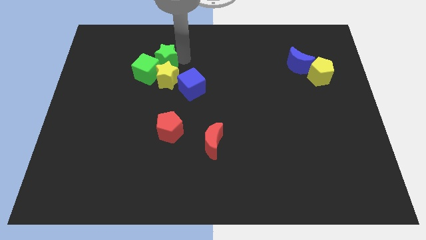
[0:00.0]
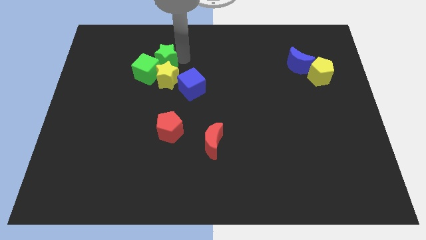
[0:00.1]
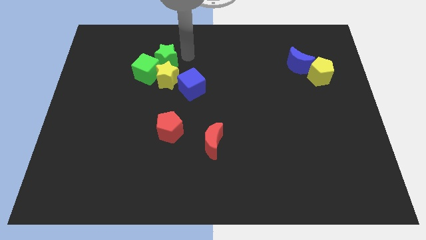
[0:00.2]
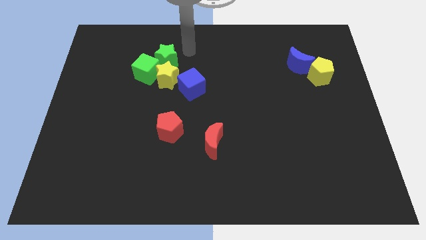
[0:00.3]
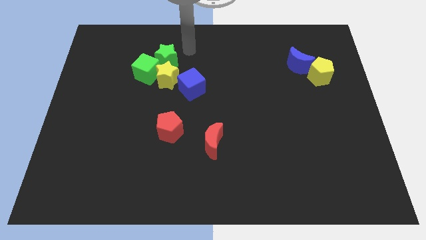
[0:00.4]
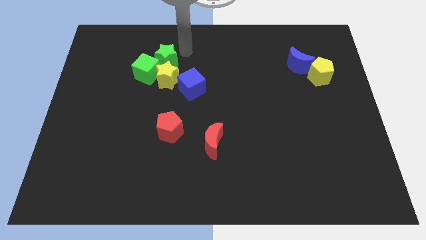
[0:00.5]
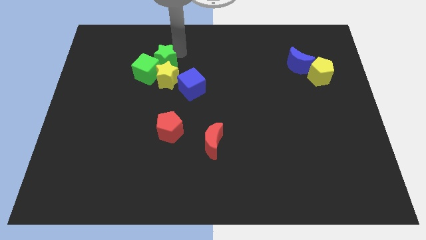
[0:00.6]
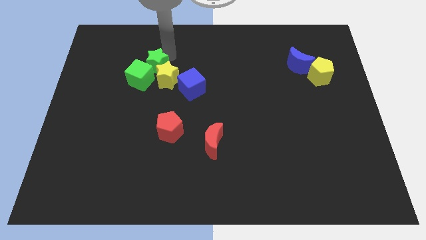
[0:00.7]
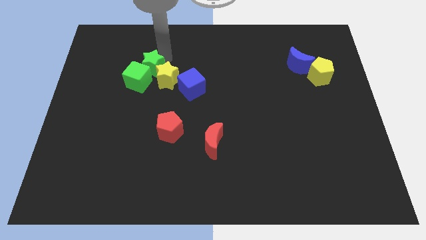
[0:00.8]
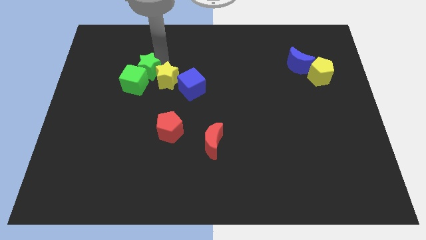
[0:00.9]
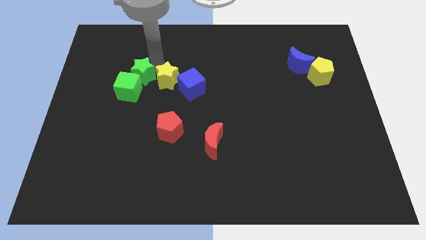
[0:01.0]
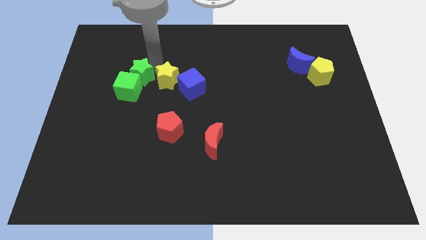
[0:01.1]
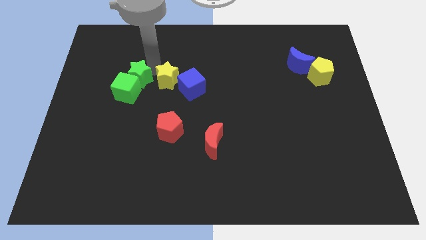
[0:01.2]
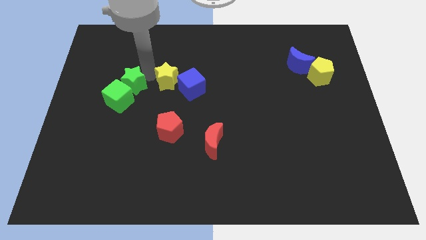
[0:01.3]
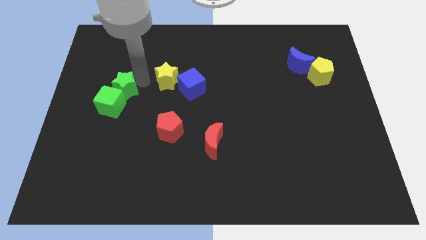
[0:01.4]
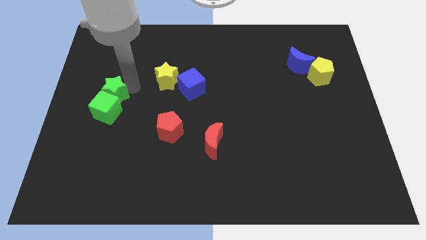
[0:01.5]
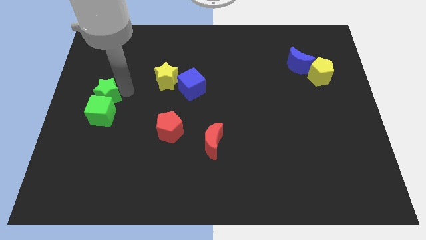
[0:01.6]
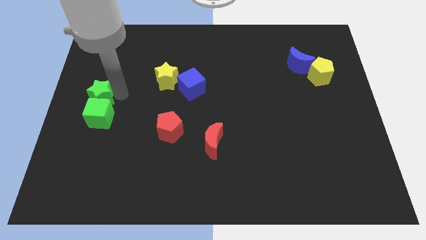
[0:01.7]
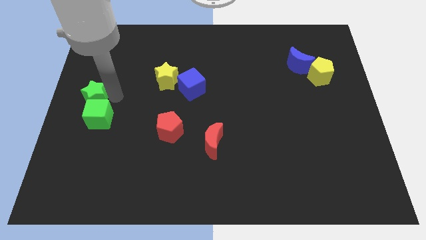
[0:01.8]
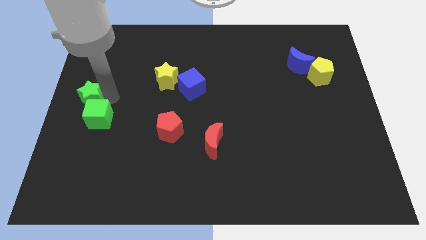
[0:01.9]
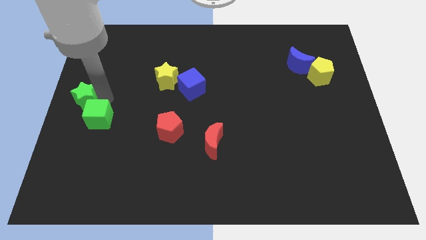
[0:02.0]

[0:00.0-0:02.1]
push the green star into the green cube

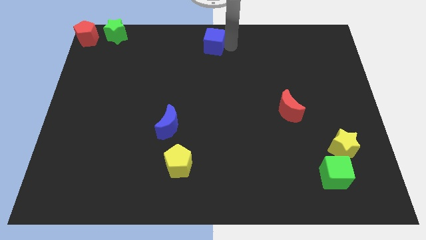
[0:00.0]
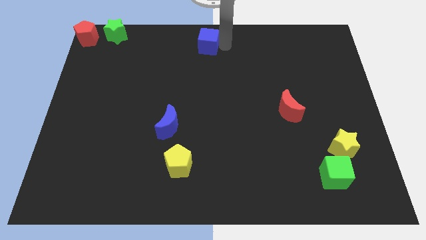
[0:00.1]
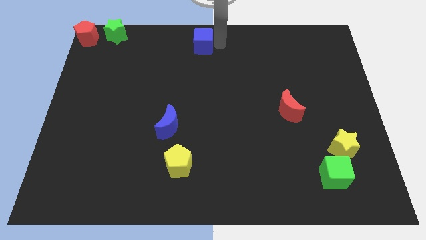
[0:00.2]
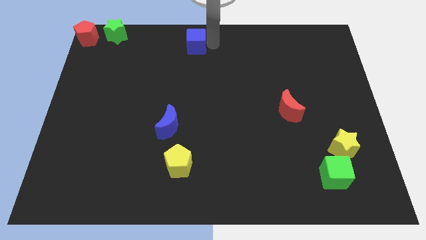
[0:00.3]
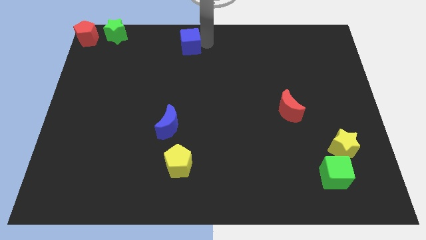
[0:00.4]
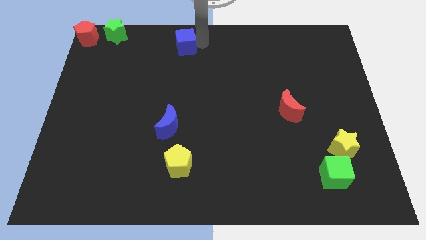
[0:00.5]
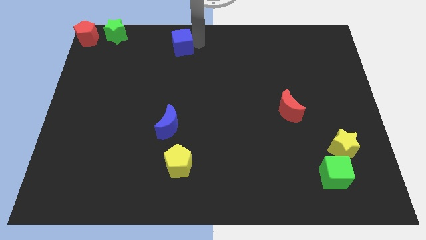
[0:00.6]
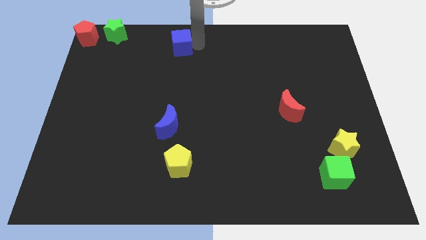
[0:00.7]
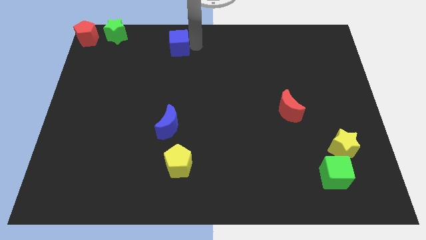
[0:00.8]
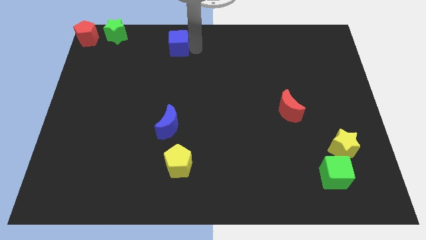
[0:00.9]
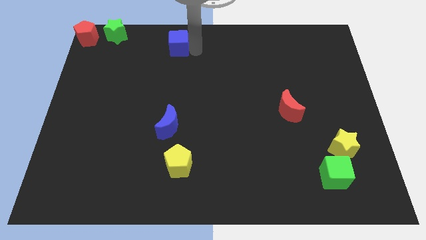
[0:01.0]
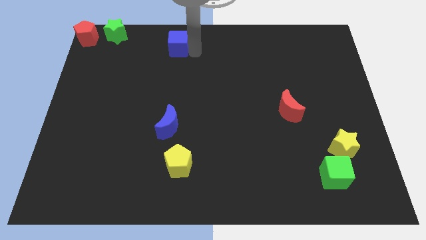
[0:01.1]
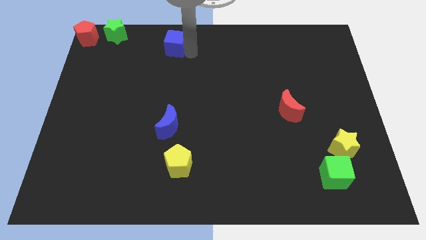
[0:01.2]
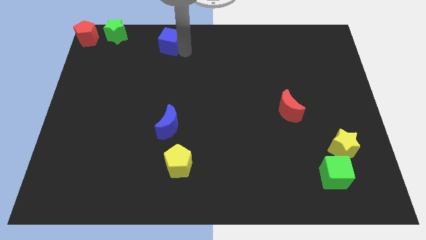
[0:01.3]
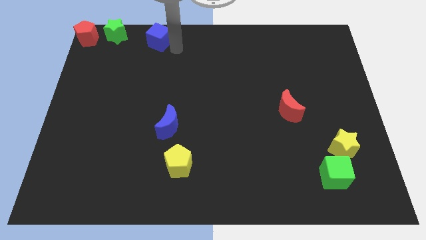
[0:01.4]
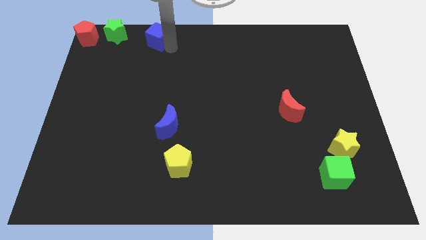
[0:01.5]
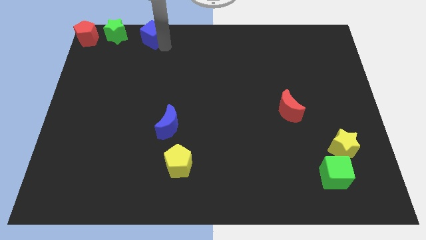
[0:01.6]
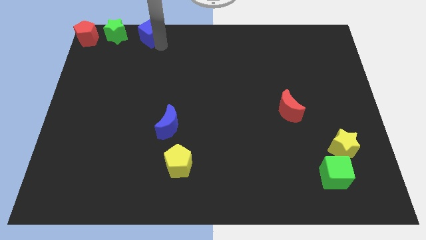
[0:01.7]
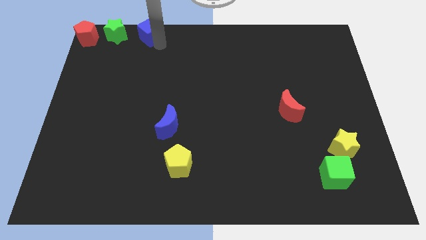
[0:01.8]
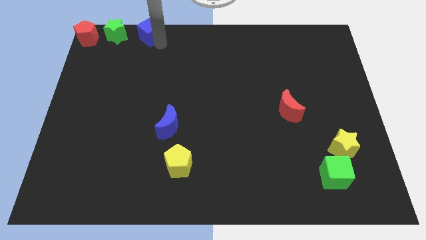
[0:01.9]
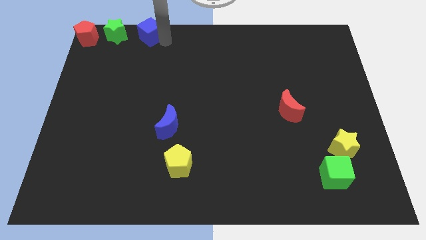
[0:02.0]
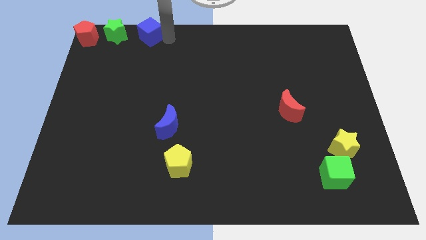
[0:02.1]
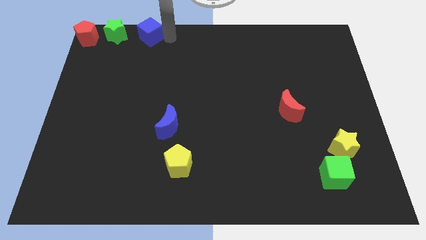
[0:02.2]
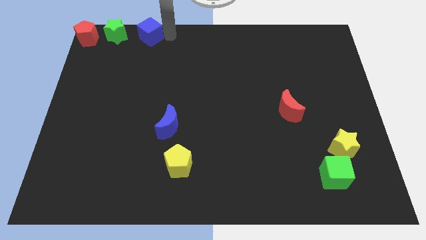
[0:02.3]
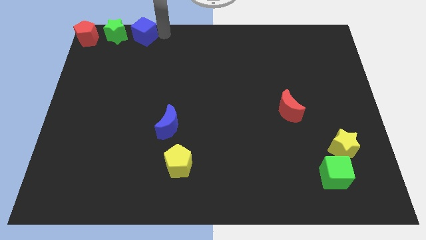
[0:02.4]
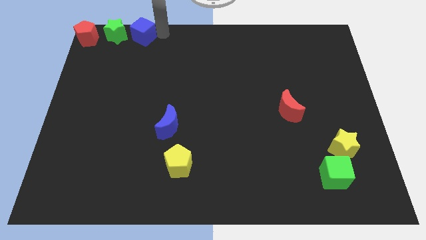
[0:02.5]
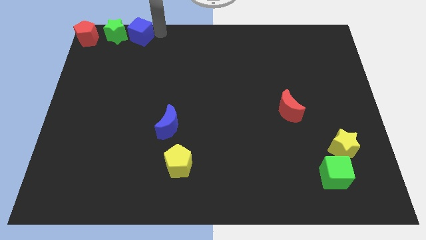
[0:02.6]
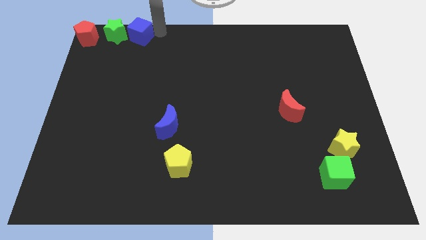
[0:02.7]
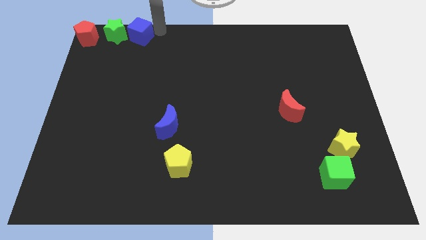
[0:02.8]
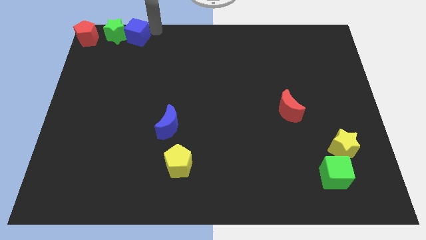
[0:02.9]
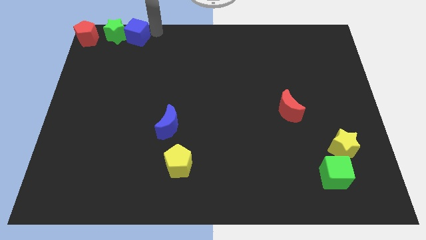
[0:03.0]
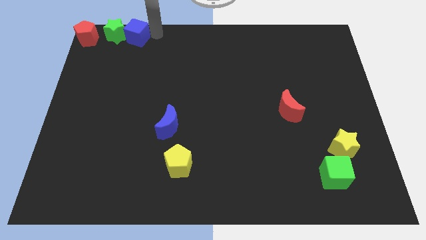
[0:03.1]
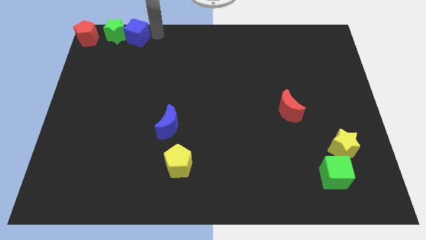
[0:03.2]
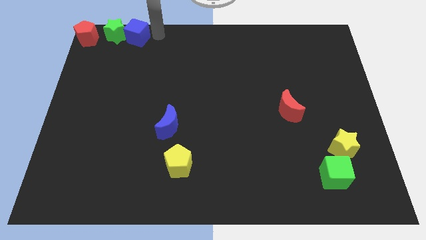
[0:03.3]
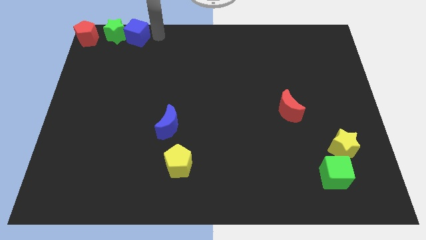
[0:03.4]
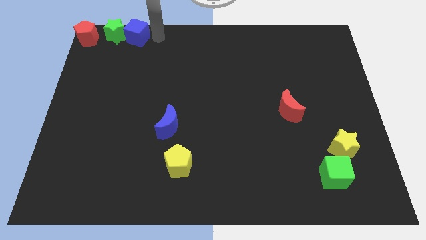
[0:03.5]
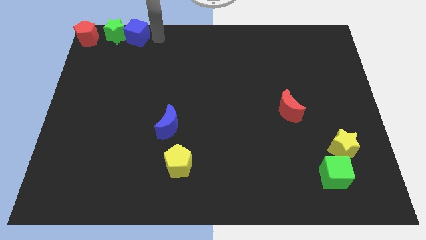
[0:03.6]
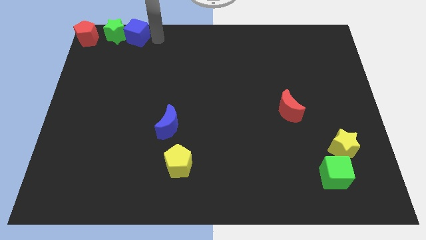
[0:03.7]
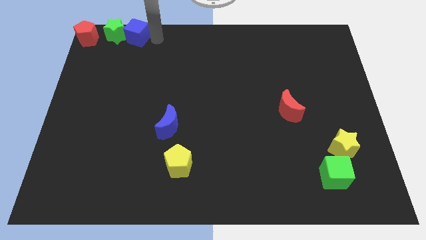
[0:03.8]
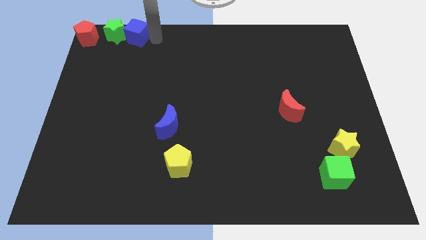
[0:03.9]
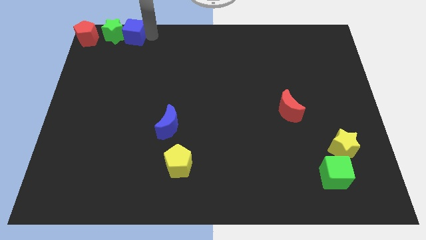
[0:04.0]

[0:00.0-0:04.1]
push the blue cube into the right side of the green star

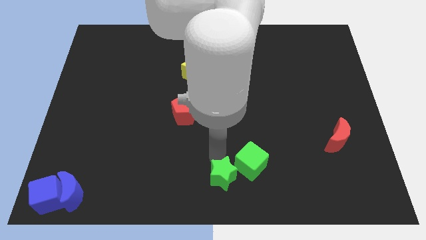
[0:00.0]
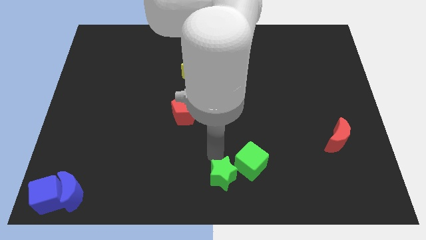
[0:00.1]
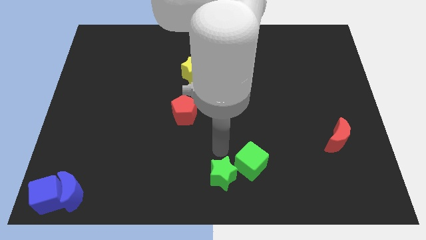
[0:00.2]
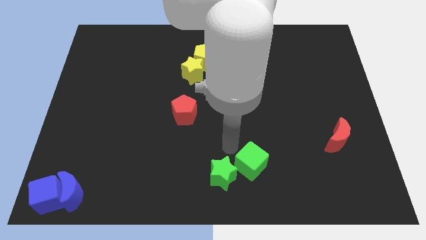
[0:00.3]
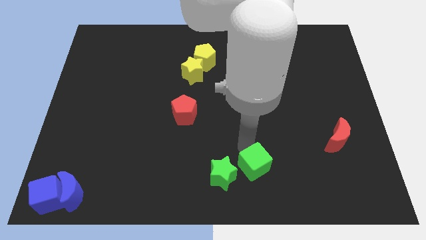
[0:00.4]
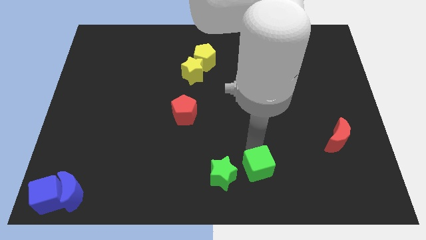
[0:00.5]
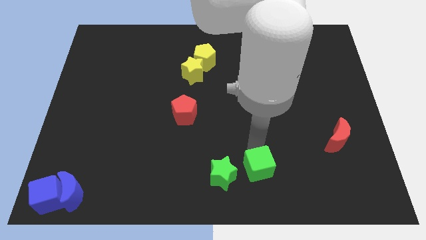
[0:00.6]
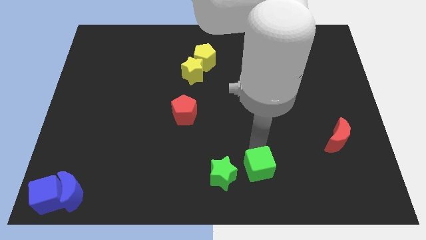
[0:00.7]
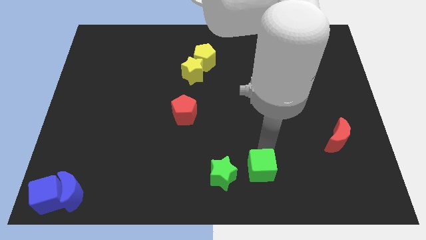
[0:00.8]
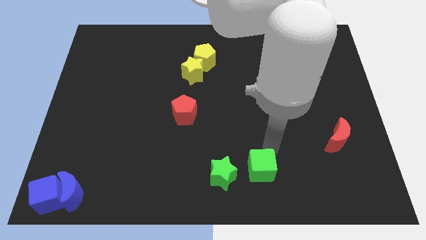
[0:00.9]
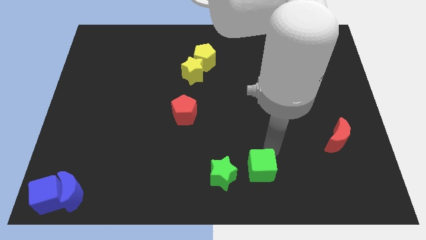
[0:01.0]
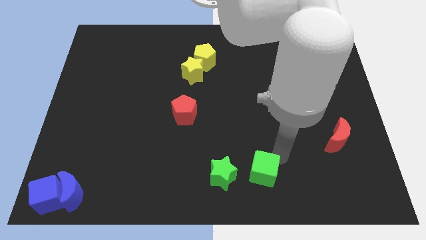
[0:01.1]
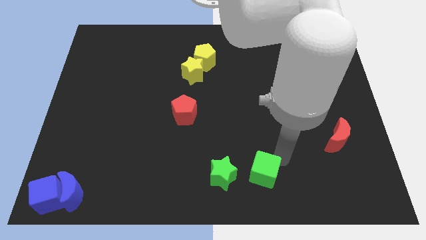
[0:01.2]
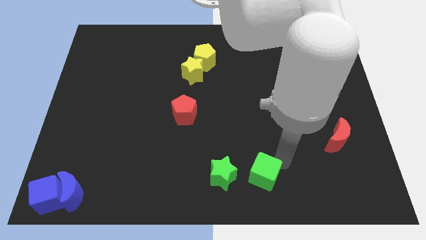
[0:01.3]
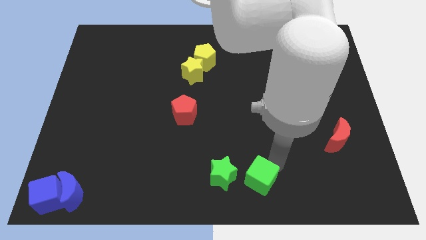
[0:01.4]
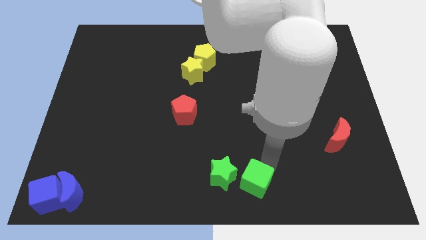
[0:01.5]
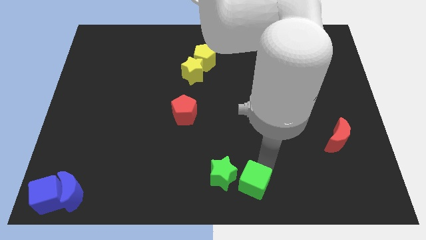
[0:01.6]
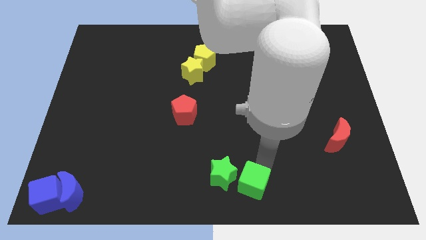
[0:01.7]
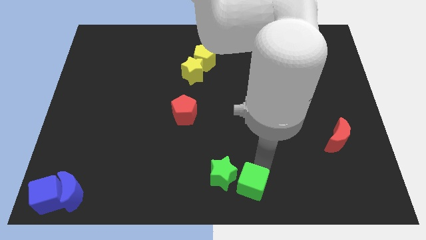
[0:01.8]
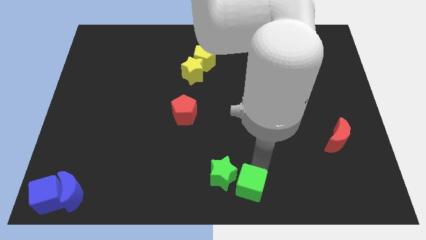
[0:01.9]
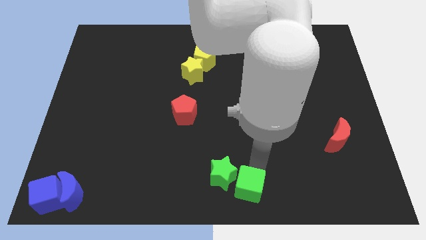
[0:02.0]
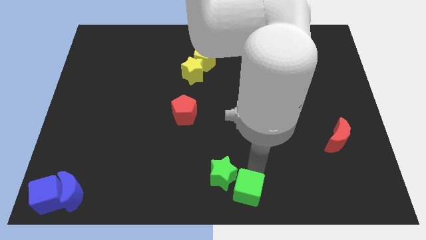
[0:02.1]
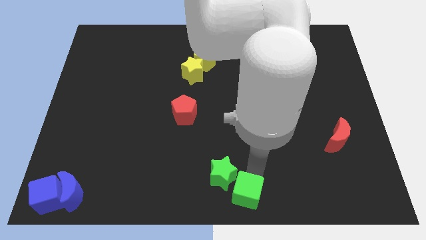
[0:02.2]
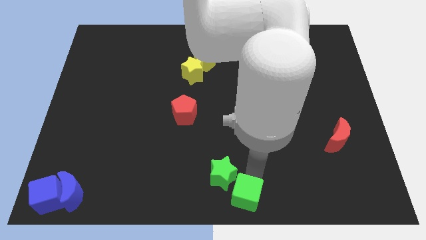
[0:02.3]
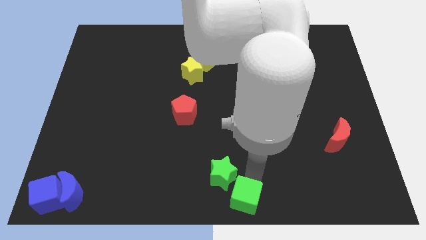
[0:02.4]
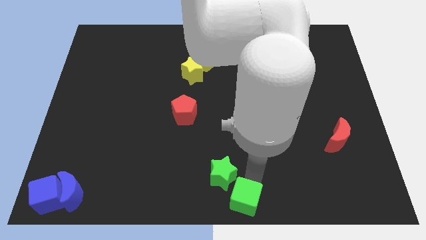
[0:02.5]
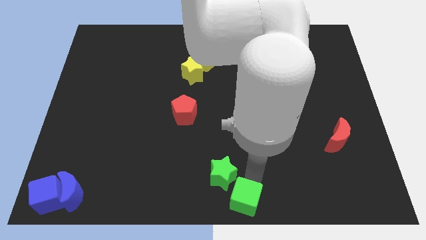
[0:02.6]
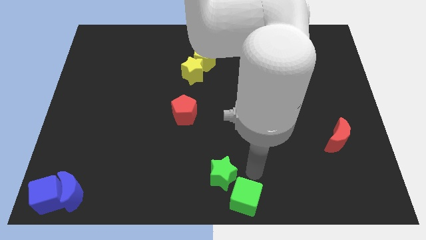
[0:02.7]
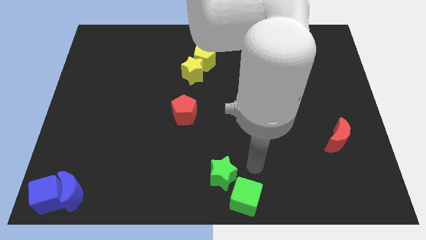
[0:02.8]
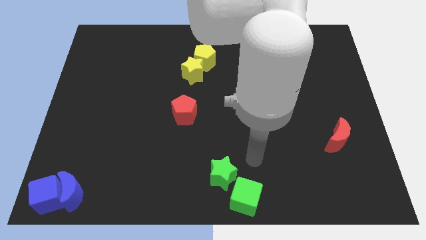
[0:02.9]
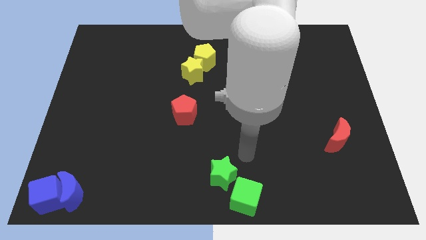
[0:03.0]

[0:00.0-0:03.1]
place the green cube towards the bottom middle end of the board
